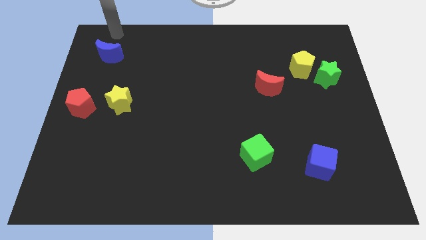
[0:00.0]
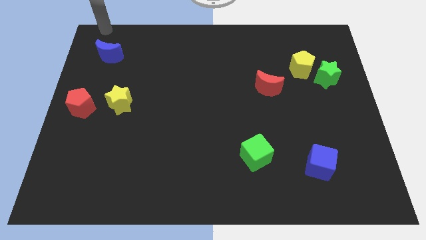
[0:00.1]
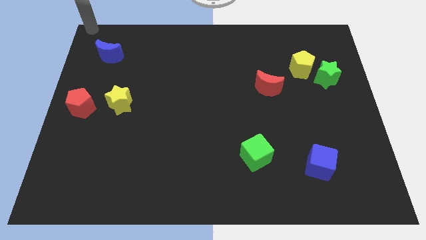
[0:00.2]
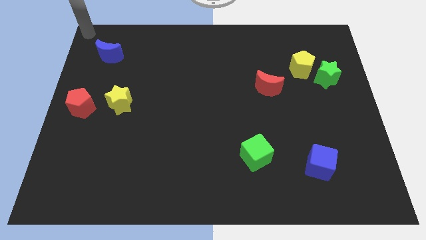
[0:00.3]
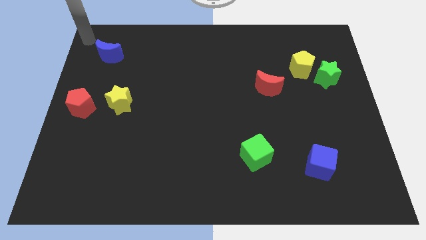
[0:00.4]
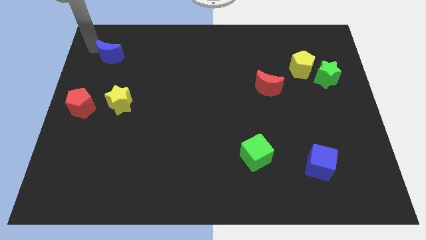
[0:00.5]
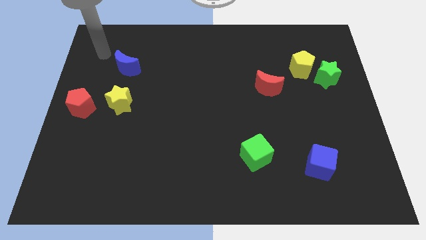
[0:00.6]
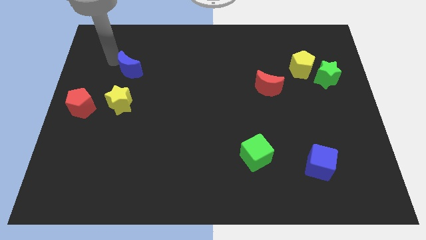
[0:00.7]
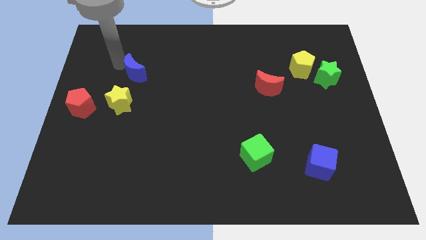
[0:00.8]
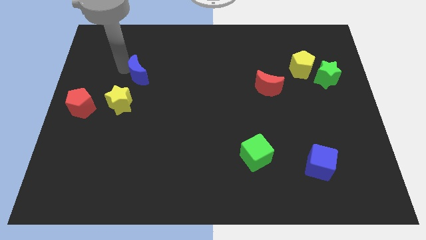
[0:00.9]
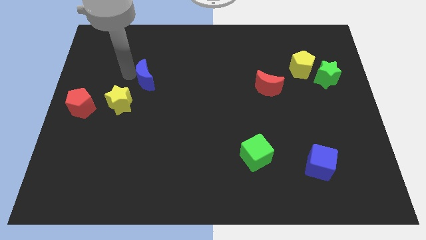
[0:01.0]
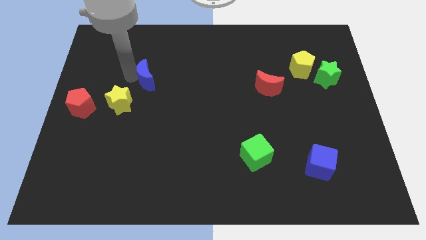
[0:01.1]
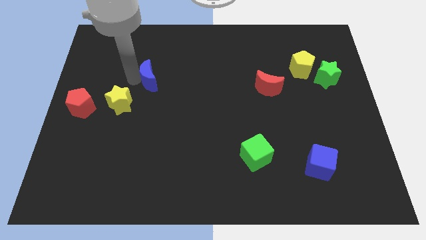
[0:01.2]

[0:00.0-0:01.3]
push the blue moon slightly towards bottom side in diagonal position

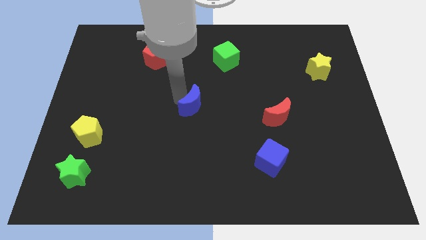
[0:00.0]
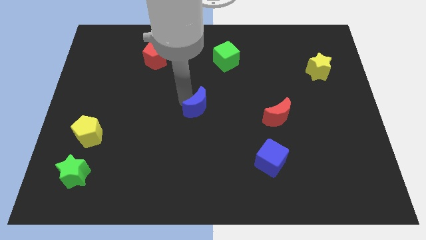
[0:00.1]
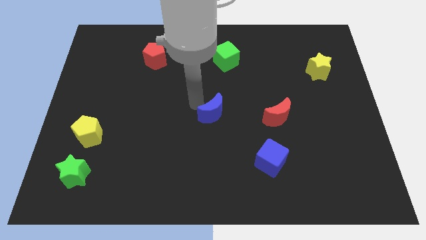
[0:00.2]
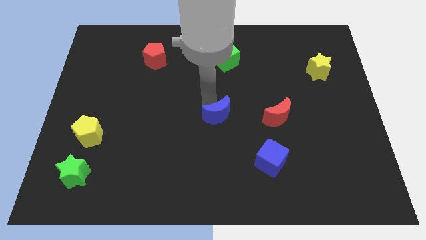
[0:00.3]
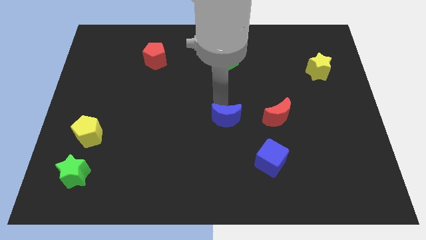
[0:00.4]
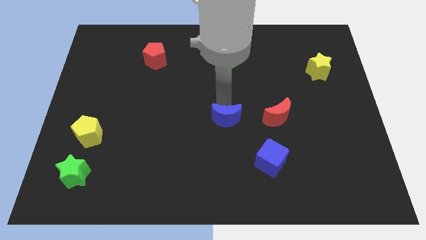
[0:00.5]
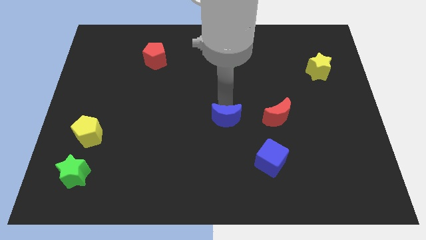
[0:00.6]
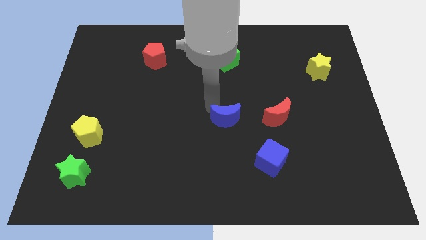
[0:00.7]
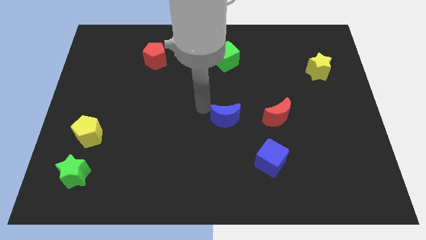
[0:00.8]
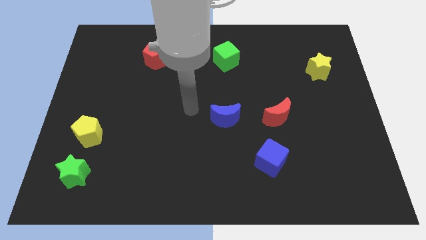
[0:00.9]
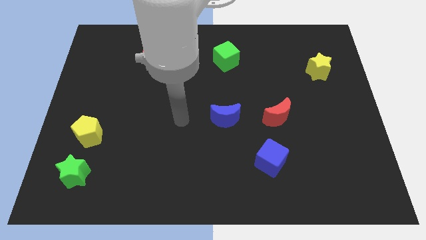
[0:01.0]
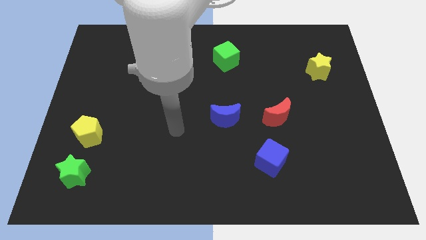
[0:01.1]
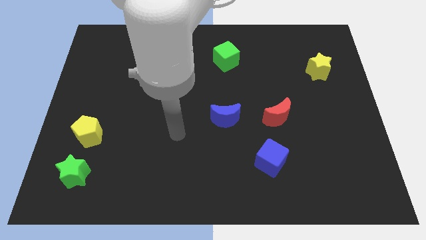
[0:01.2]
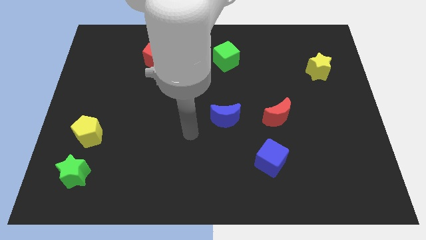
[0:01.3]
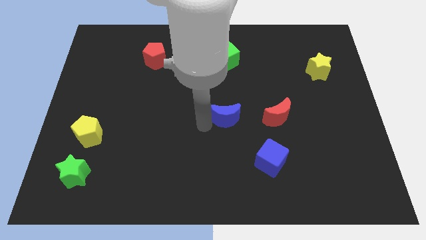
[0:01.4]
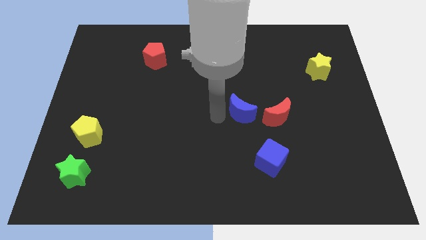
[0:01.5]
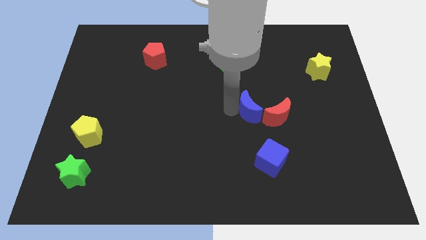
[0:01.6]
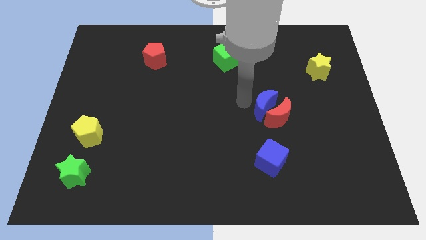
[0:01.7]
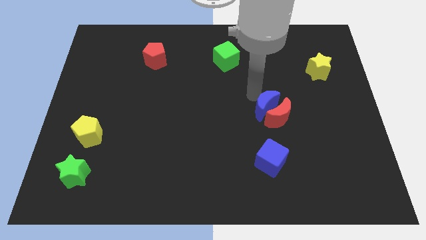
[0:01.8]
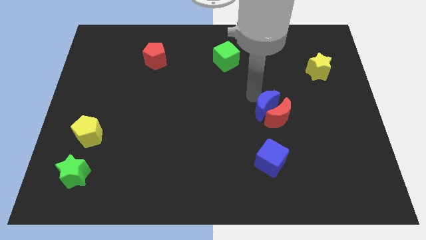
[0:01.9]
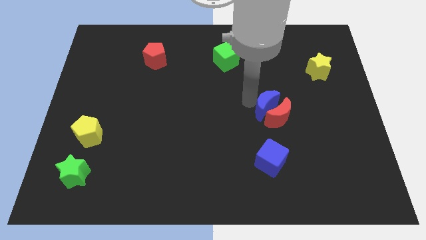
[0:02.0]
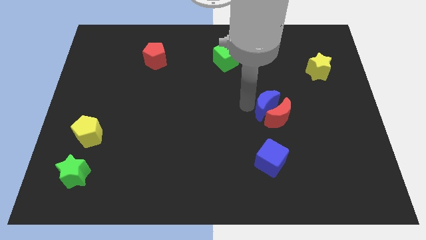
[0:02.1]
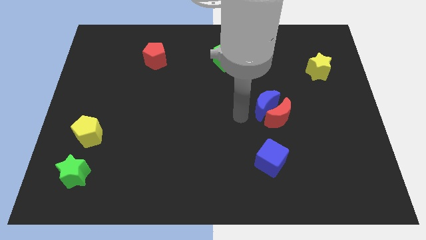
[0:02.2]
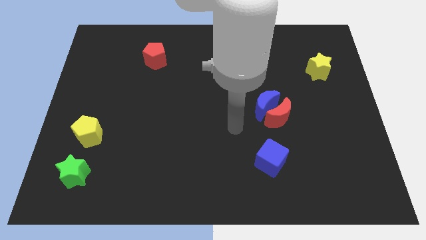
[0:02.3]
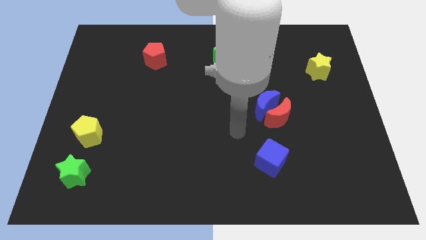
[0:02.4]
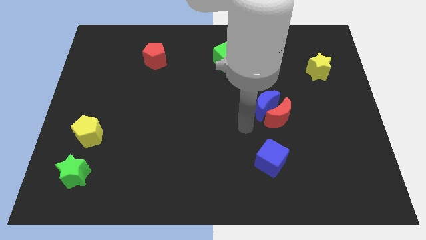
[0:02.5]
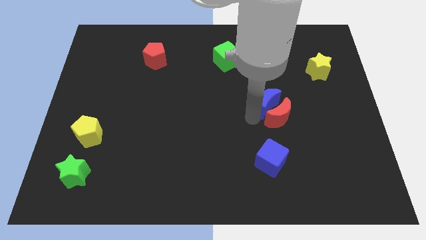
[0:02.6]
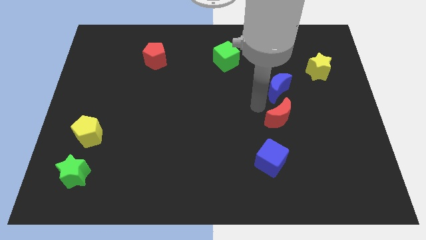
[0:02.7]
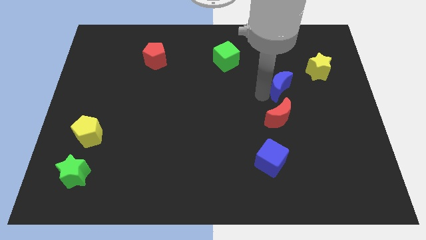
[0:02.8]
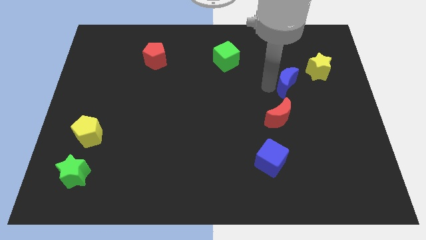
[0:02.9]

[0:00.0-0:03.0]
move the blue crescent to the top right to the red crescent

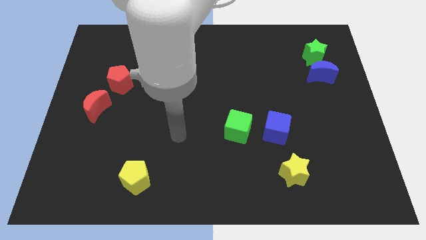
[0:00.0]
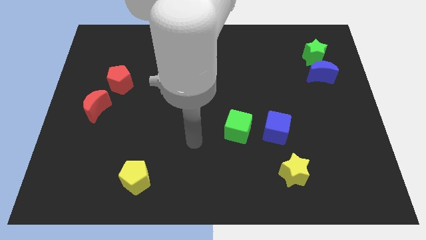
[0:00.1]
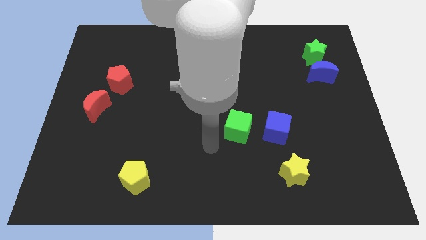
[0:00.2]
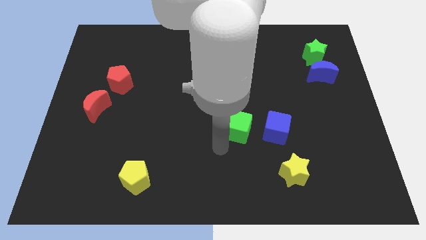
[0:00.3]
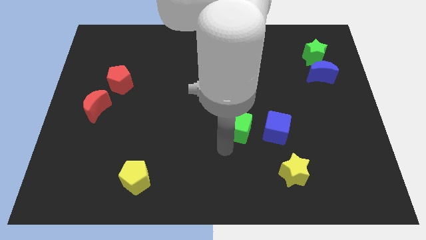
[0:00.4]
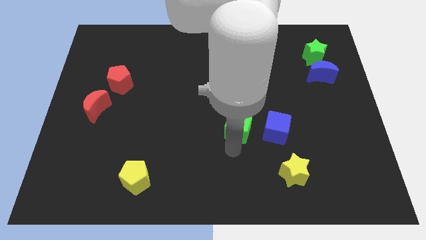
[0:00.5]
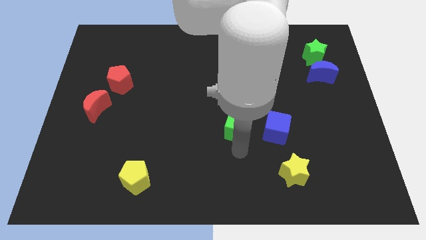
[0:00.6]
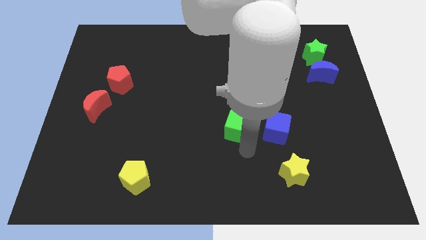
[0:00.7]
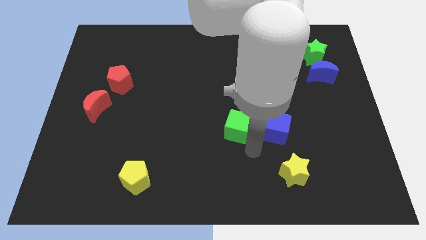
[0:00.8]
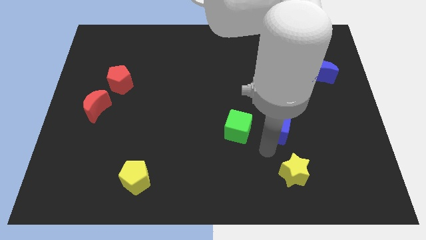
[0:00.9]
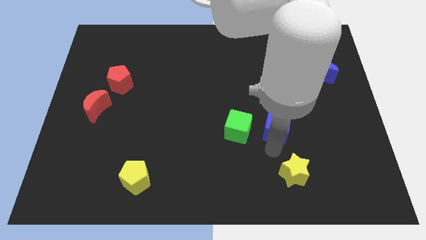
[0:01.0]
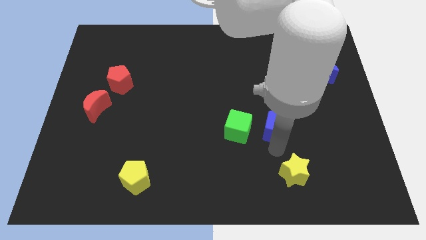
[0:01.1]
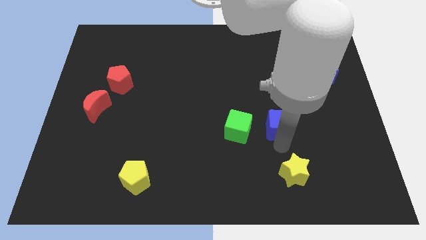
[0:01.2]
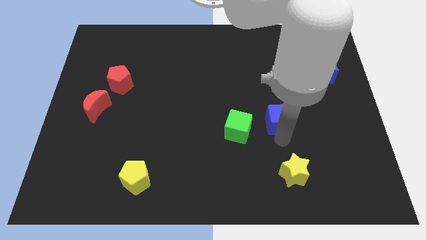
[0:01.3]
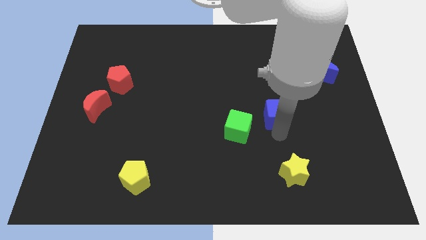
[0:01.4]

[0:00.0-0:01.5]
slightly move the blue cube to the top

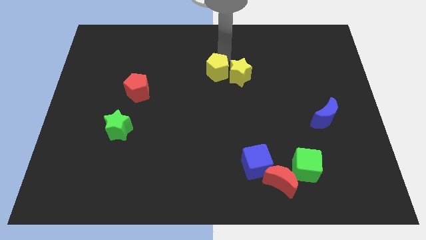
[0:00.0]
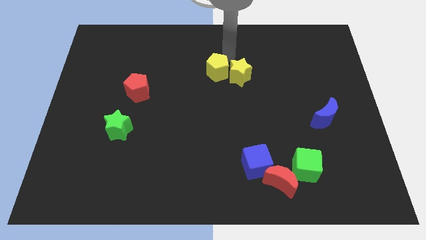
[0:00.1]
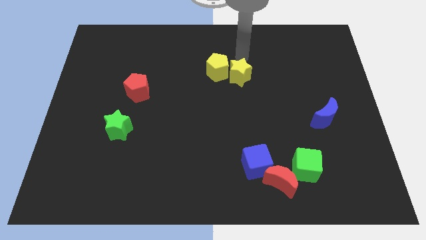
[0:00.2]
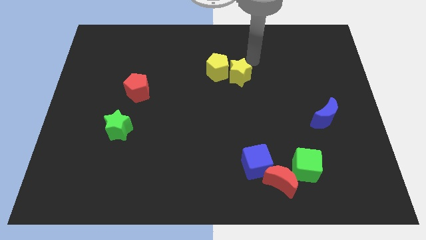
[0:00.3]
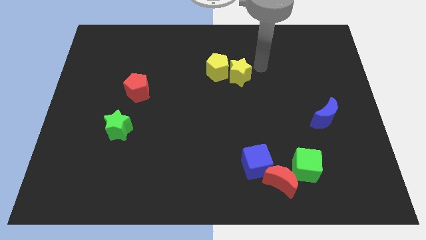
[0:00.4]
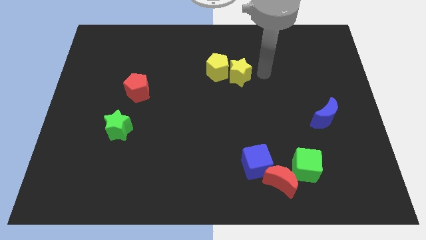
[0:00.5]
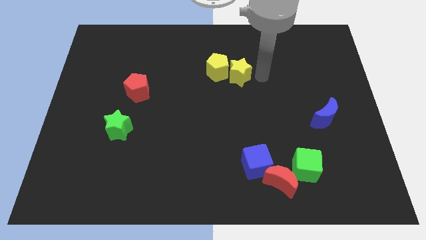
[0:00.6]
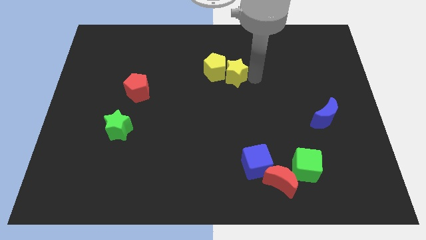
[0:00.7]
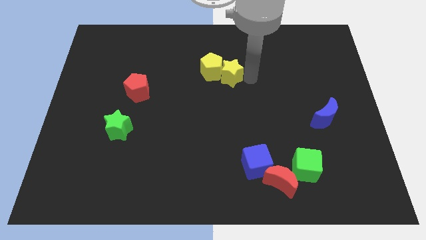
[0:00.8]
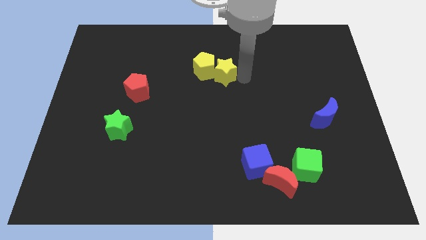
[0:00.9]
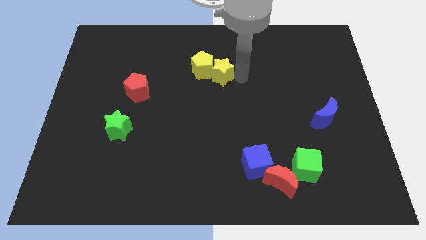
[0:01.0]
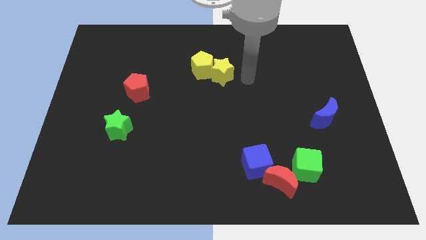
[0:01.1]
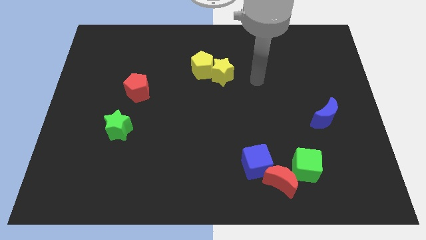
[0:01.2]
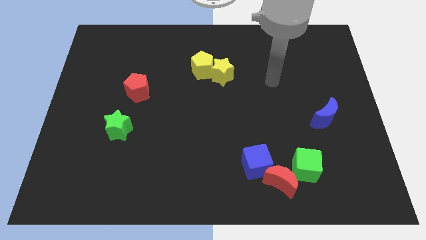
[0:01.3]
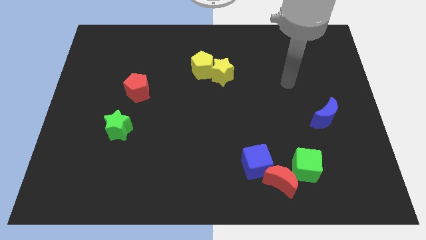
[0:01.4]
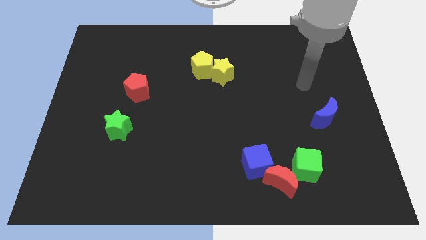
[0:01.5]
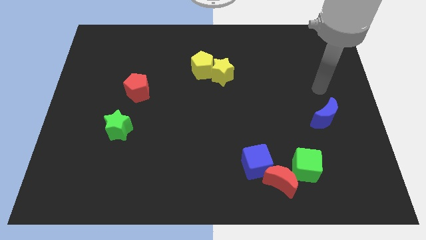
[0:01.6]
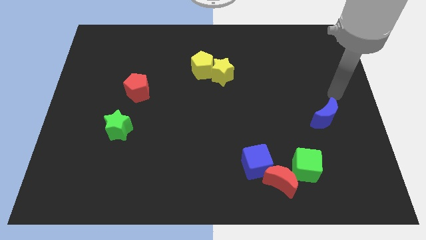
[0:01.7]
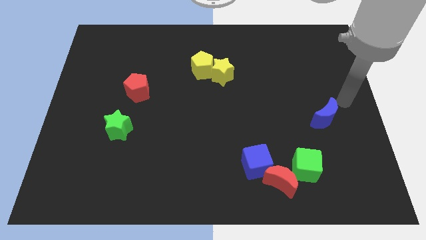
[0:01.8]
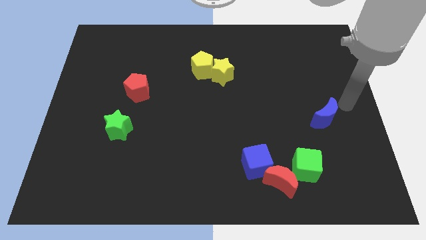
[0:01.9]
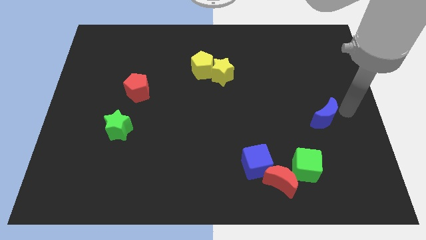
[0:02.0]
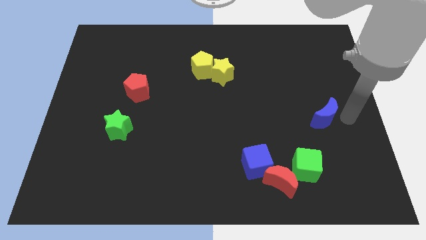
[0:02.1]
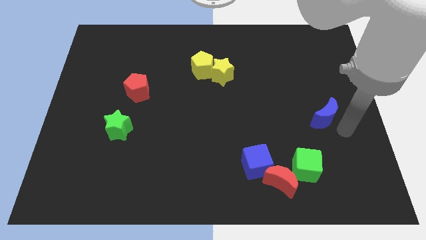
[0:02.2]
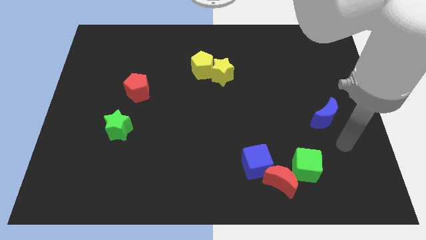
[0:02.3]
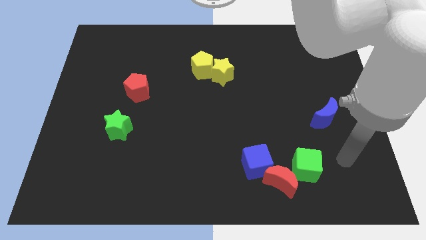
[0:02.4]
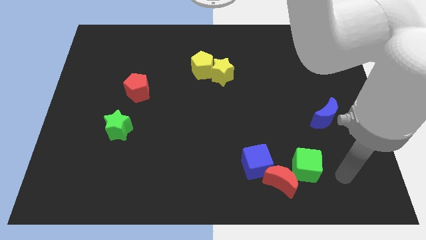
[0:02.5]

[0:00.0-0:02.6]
push the yellow pentagon and yellow star towards the top side of the board

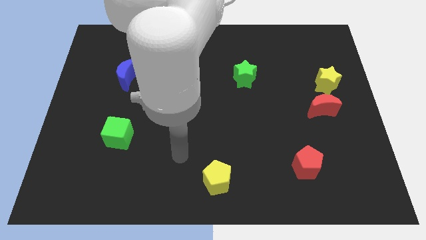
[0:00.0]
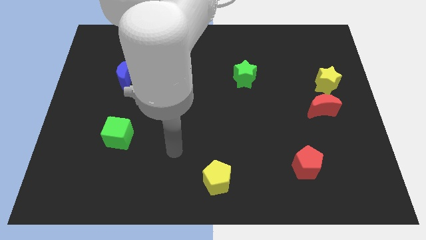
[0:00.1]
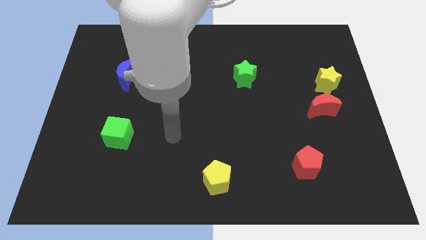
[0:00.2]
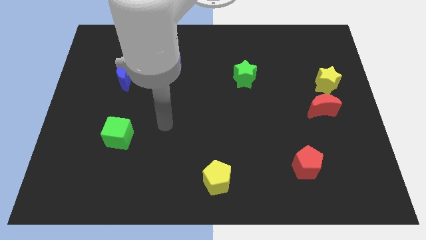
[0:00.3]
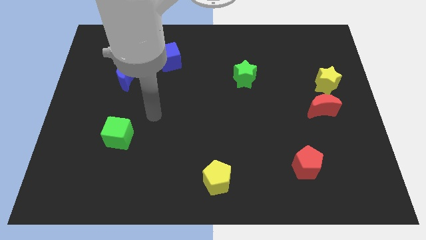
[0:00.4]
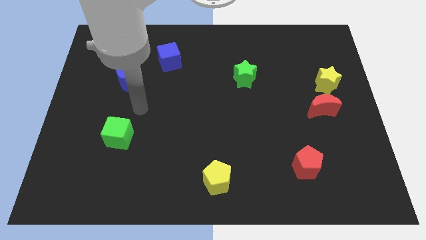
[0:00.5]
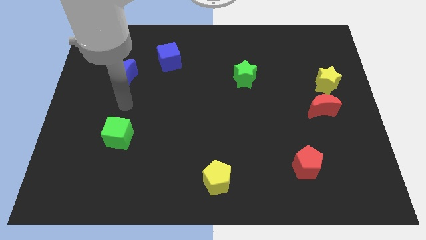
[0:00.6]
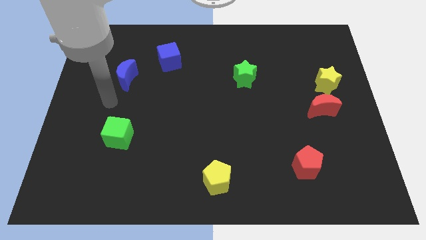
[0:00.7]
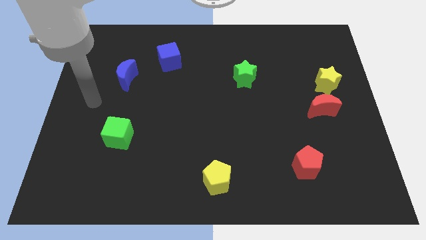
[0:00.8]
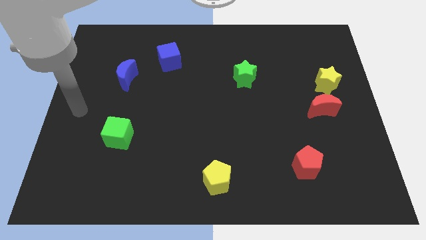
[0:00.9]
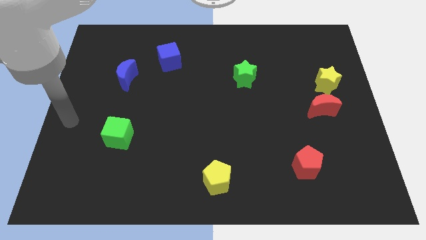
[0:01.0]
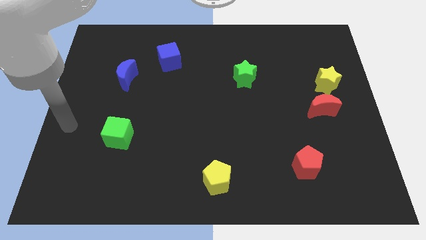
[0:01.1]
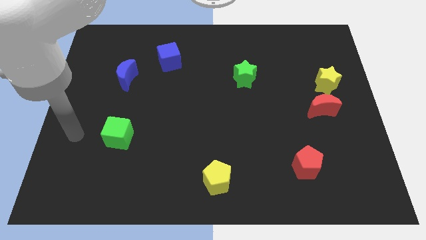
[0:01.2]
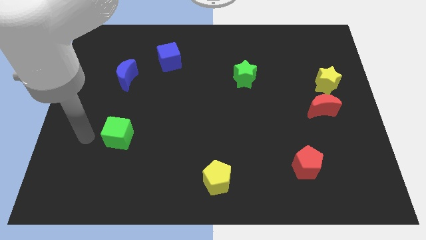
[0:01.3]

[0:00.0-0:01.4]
place your arm to the left of green cube
